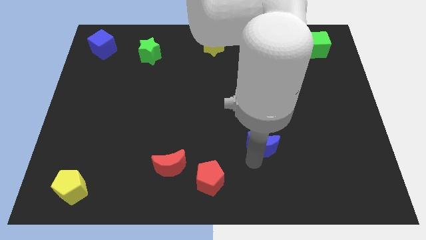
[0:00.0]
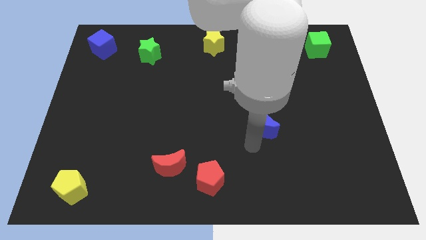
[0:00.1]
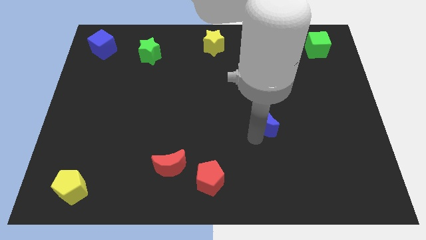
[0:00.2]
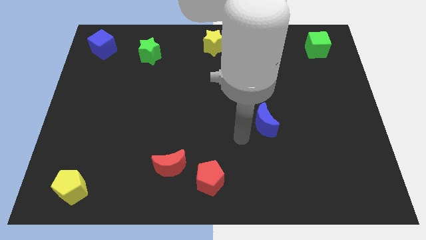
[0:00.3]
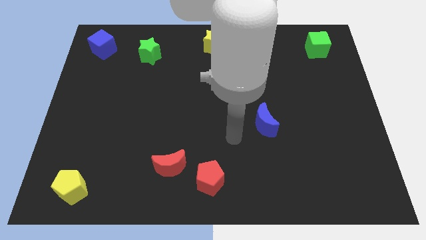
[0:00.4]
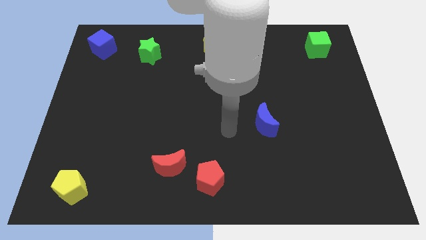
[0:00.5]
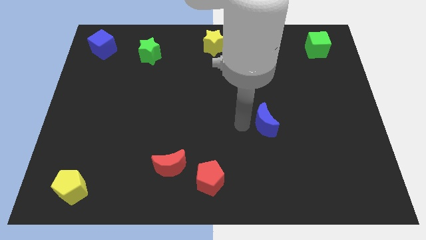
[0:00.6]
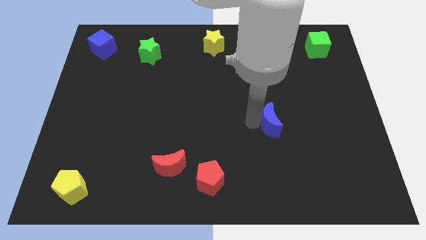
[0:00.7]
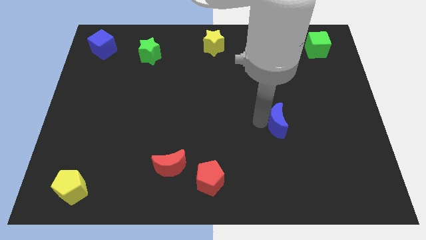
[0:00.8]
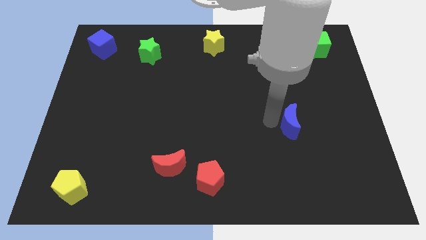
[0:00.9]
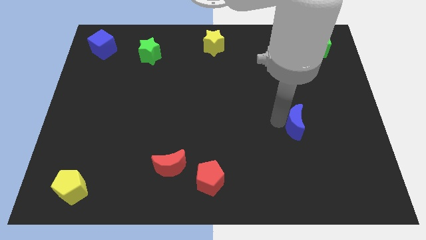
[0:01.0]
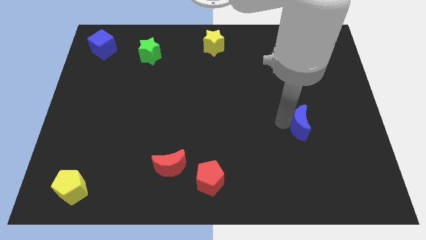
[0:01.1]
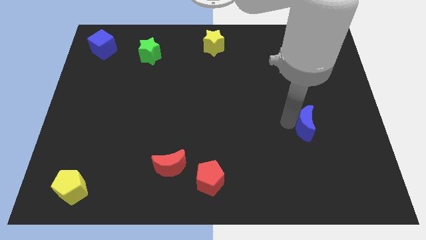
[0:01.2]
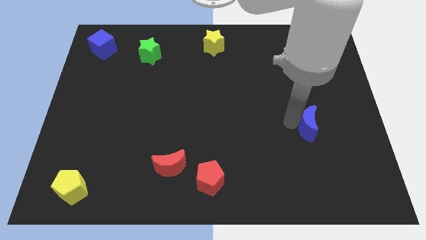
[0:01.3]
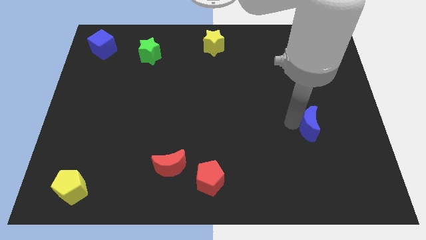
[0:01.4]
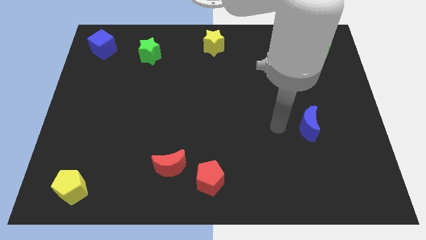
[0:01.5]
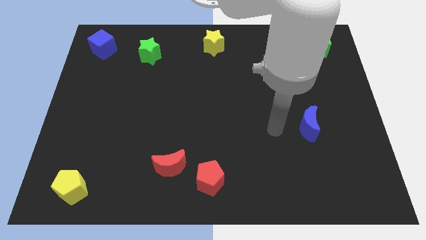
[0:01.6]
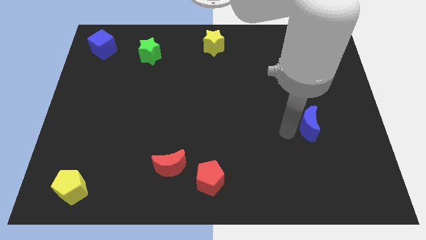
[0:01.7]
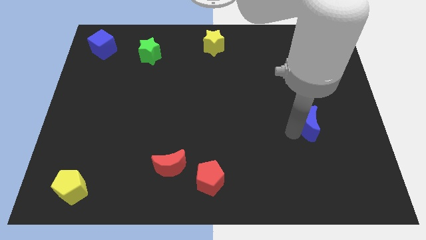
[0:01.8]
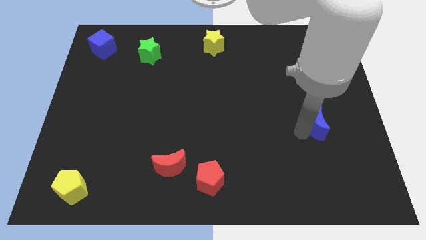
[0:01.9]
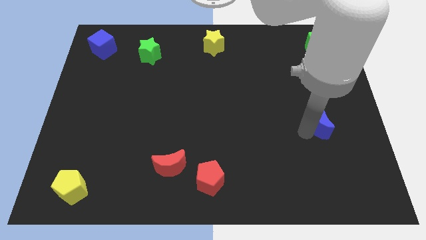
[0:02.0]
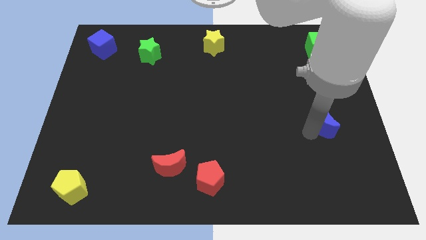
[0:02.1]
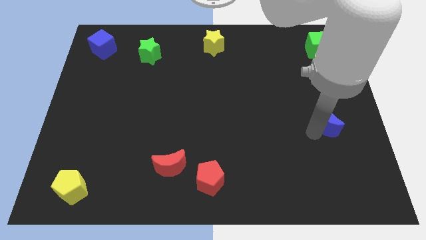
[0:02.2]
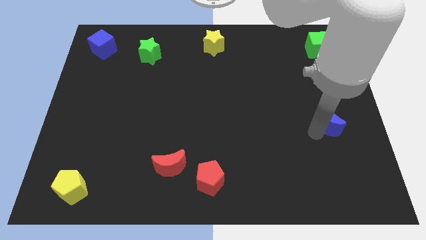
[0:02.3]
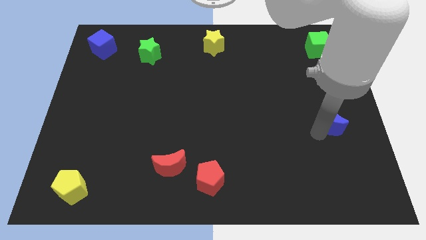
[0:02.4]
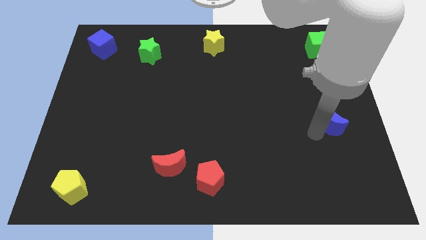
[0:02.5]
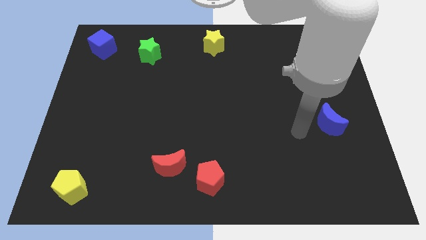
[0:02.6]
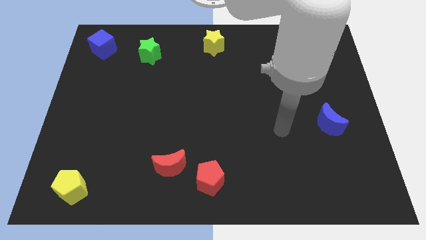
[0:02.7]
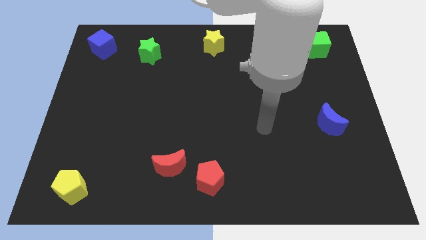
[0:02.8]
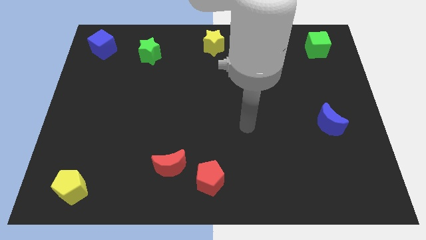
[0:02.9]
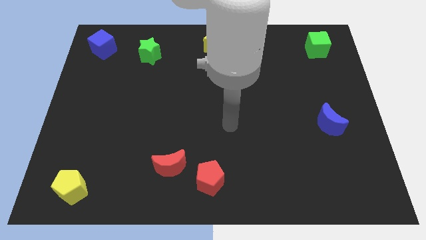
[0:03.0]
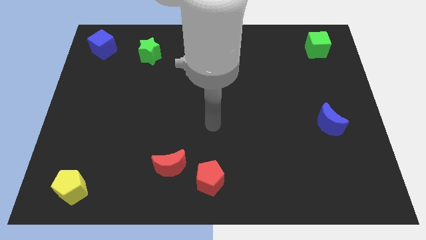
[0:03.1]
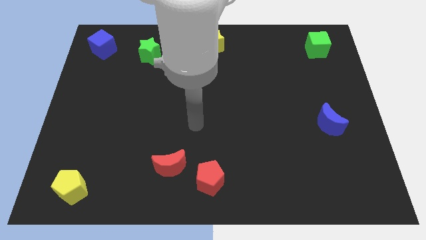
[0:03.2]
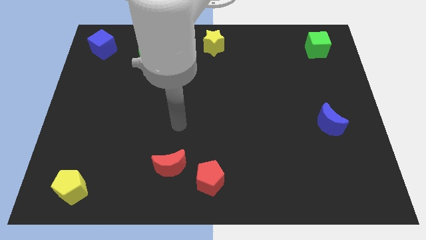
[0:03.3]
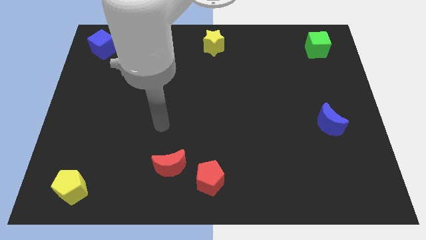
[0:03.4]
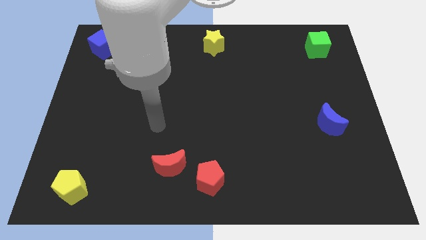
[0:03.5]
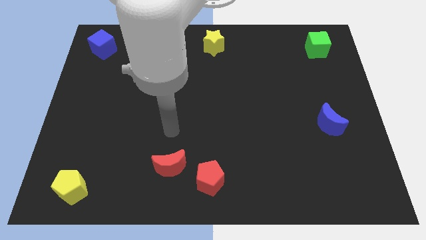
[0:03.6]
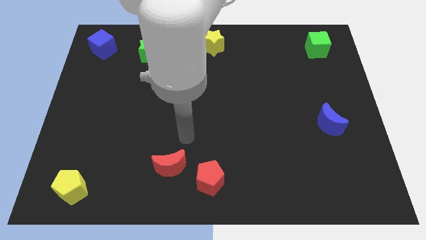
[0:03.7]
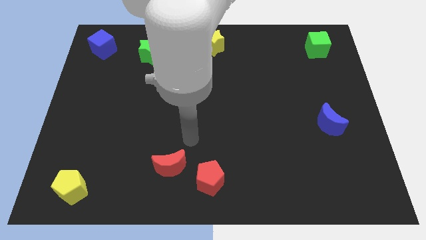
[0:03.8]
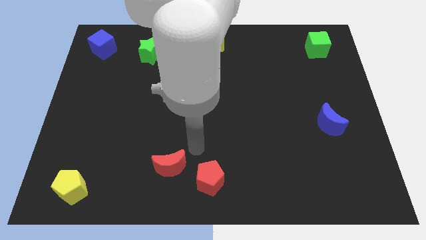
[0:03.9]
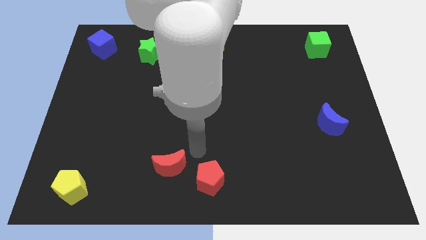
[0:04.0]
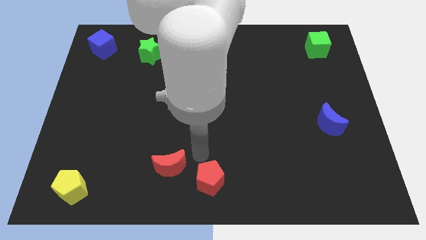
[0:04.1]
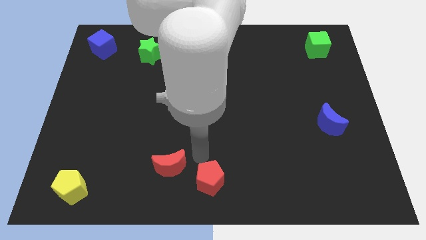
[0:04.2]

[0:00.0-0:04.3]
drag the blue moon to the right side of the board

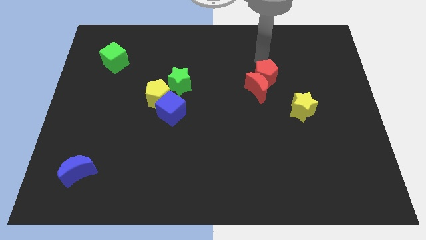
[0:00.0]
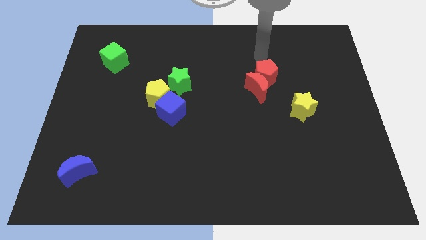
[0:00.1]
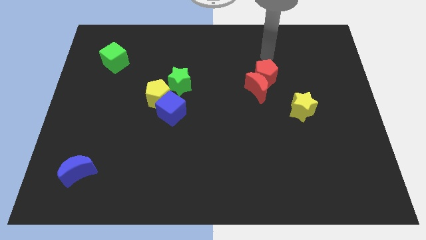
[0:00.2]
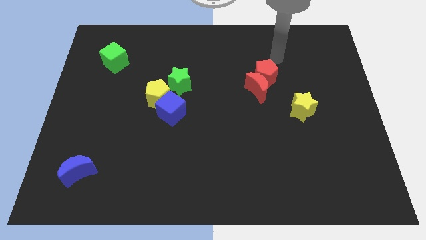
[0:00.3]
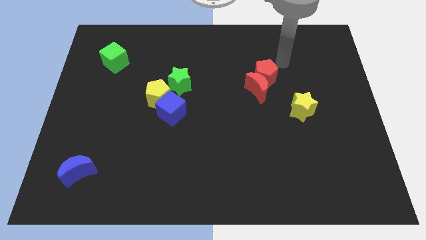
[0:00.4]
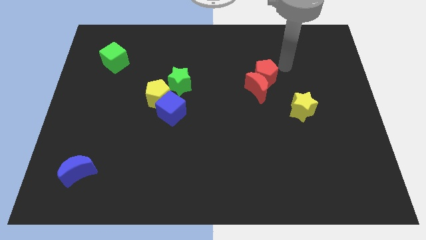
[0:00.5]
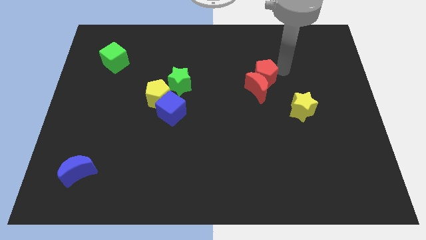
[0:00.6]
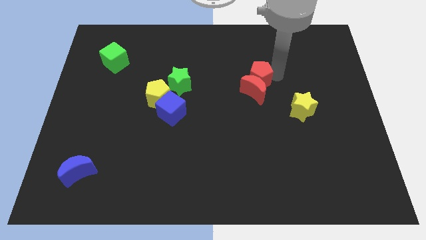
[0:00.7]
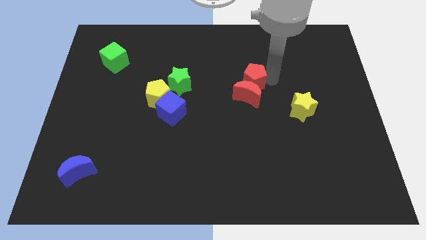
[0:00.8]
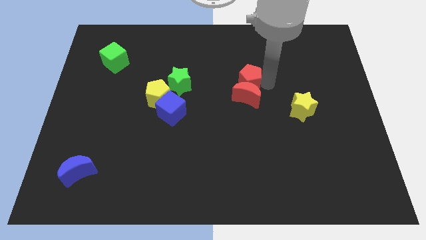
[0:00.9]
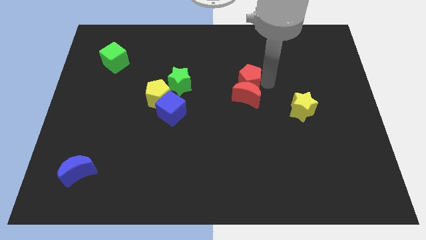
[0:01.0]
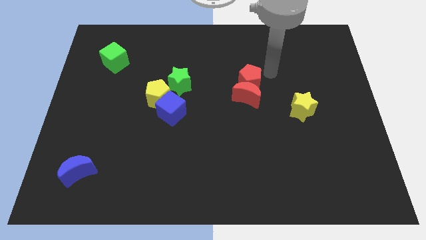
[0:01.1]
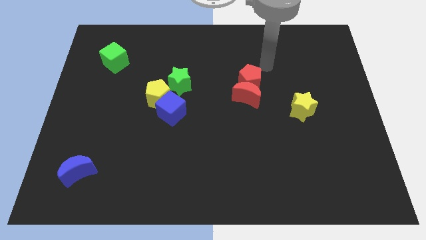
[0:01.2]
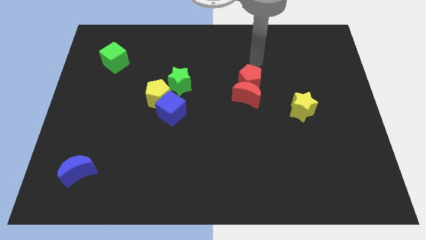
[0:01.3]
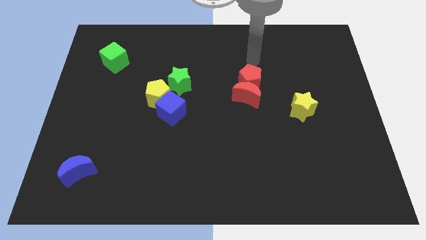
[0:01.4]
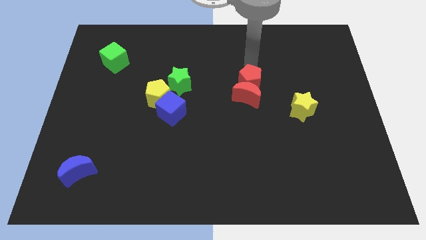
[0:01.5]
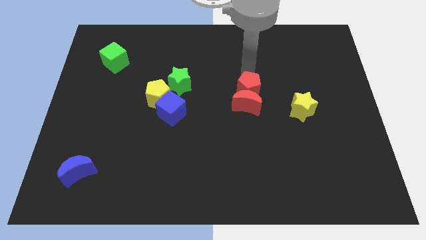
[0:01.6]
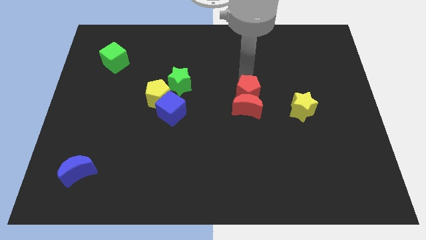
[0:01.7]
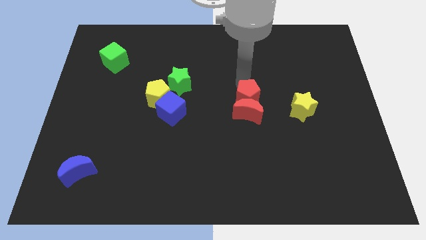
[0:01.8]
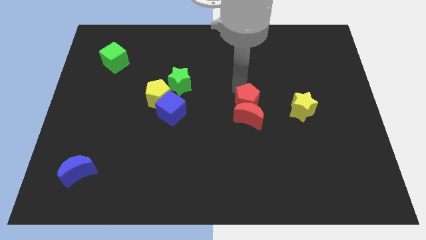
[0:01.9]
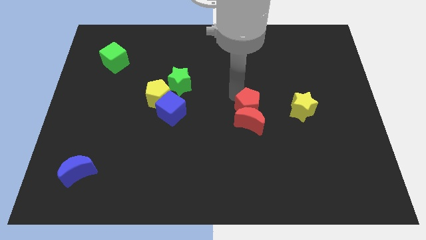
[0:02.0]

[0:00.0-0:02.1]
push the re pentagon towards down

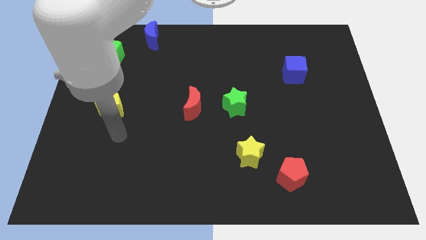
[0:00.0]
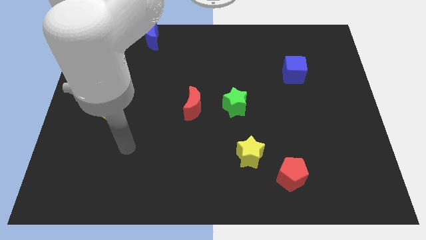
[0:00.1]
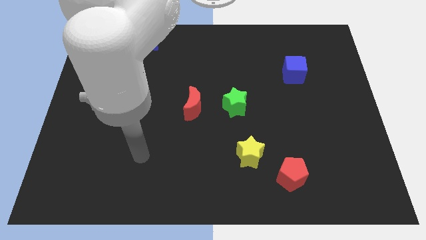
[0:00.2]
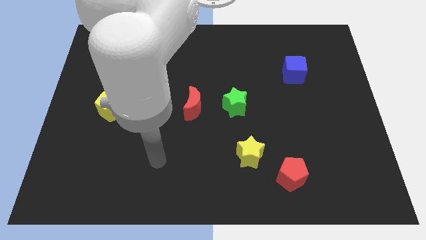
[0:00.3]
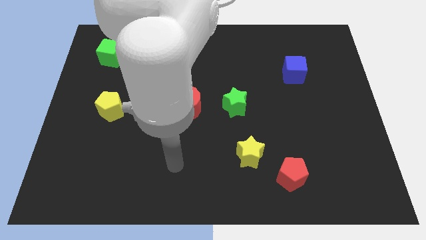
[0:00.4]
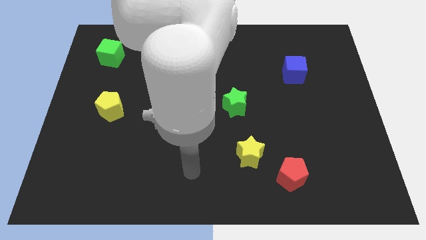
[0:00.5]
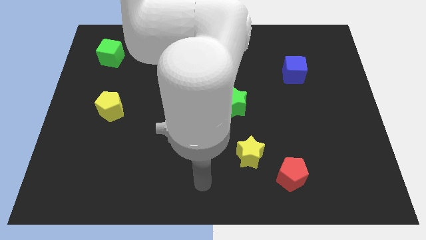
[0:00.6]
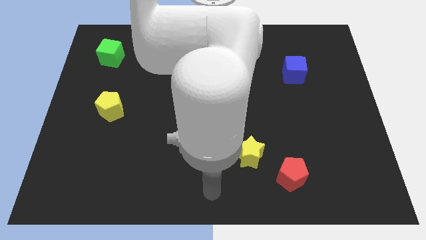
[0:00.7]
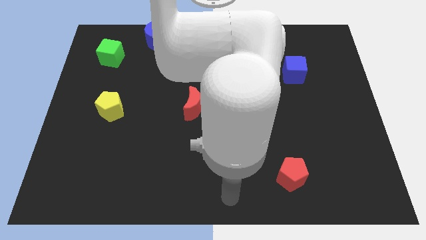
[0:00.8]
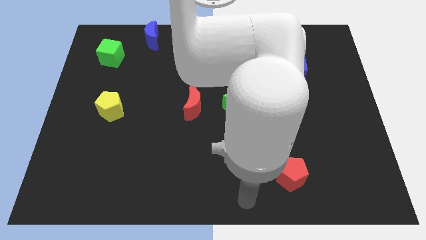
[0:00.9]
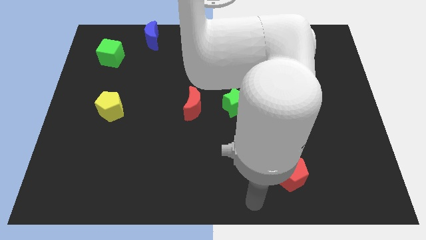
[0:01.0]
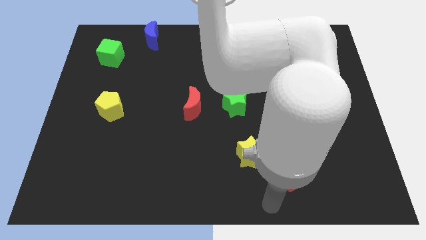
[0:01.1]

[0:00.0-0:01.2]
move your hand away from the yellow pentagon

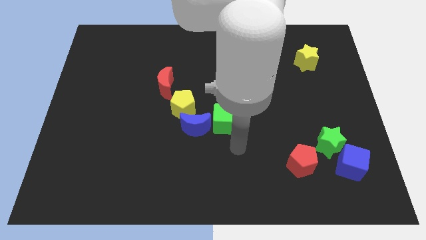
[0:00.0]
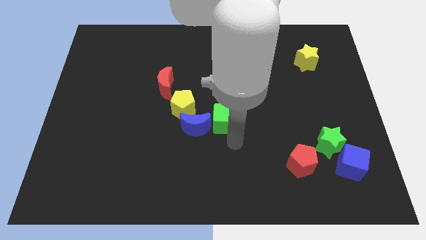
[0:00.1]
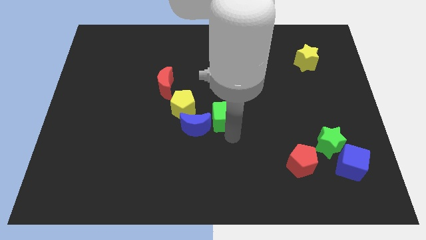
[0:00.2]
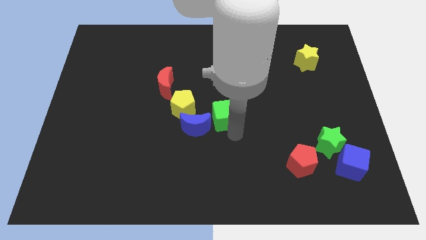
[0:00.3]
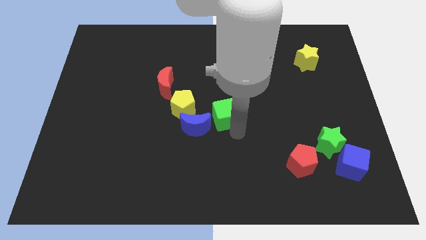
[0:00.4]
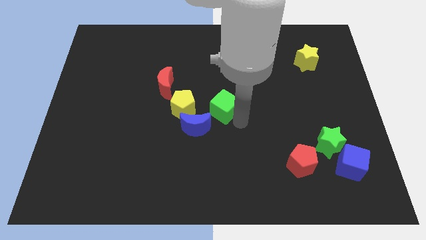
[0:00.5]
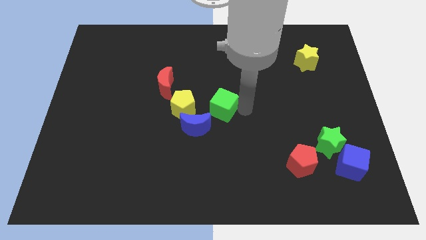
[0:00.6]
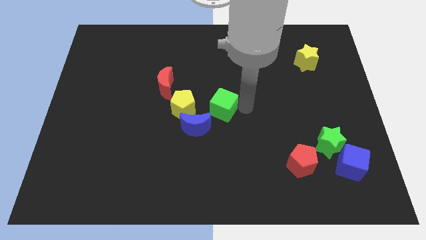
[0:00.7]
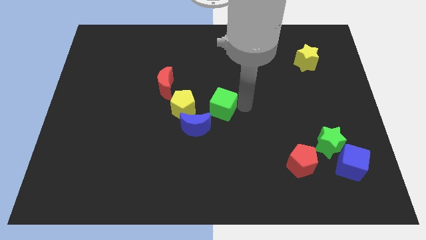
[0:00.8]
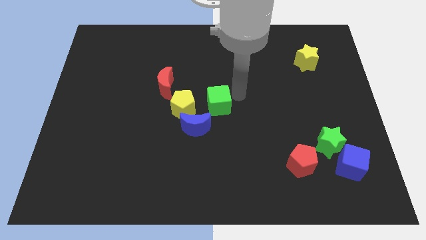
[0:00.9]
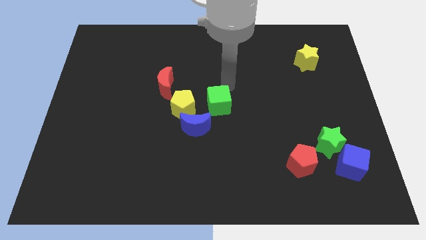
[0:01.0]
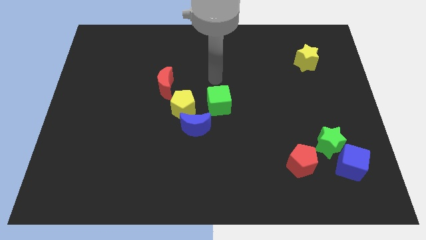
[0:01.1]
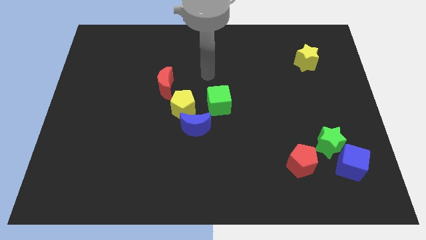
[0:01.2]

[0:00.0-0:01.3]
place the green cube to the right of the yellow pentagon

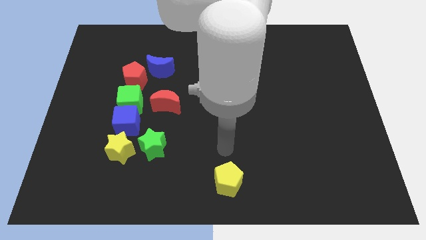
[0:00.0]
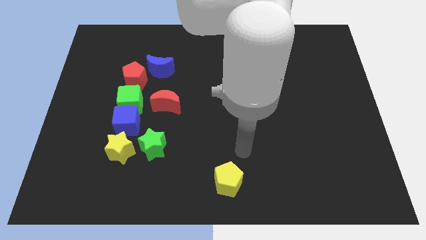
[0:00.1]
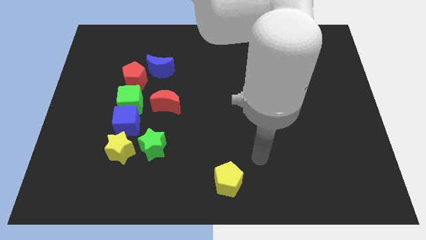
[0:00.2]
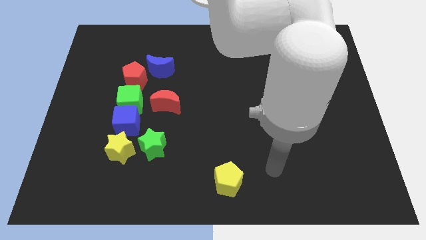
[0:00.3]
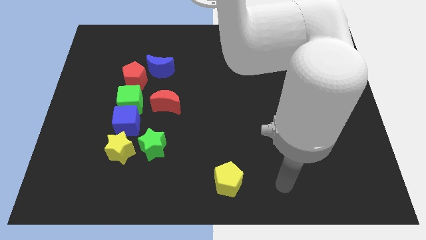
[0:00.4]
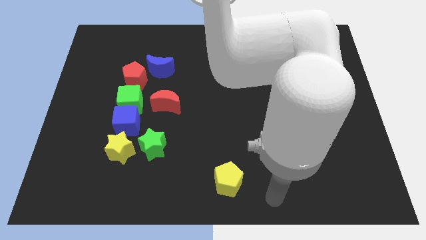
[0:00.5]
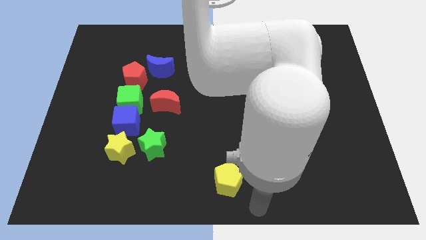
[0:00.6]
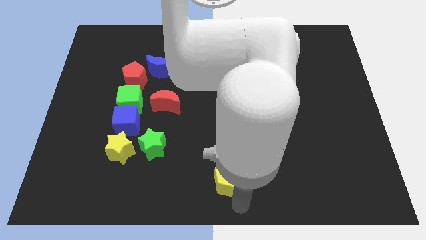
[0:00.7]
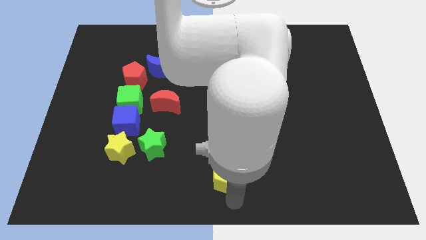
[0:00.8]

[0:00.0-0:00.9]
move your arm to the bottom of the yellow pentagon
